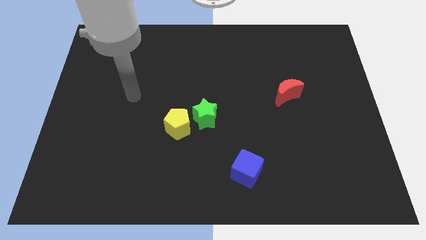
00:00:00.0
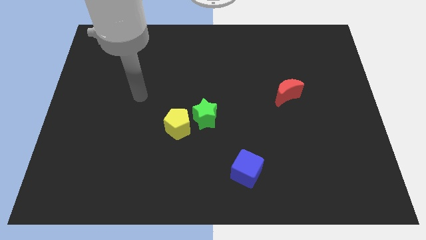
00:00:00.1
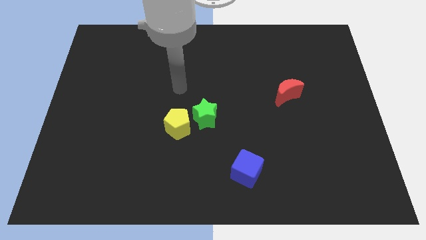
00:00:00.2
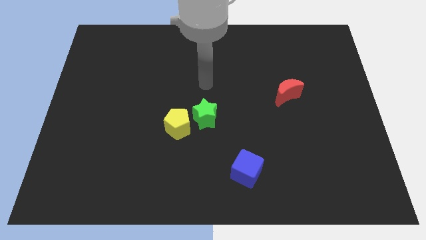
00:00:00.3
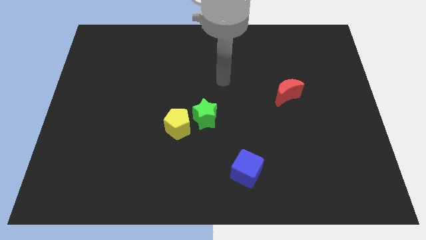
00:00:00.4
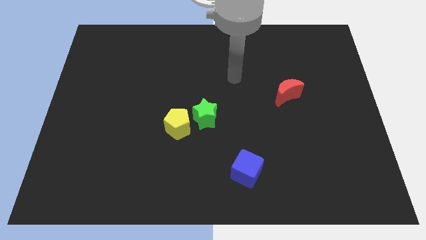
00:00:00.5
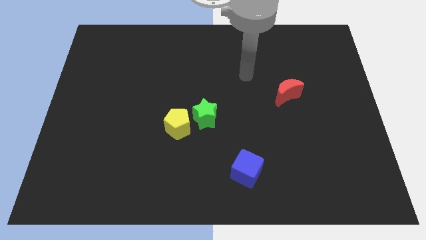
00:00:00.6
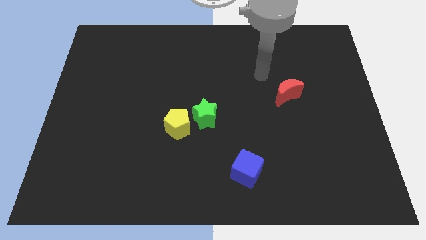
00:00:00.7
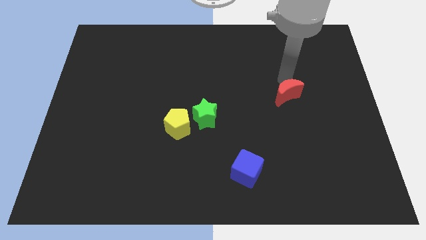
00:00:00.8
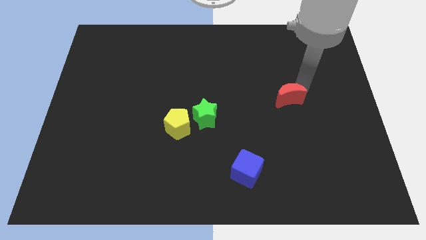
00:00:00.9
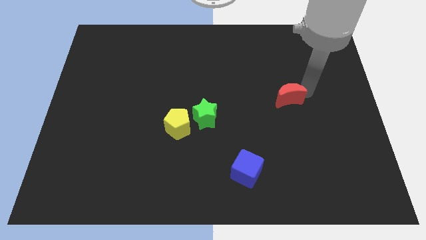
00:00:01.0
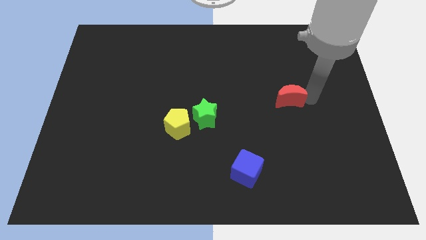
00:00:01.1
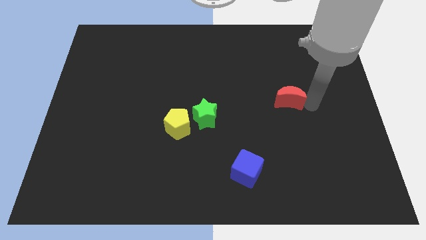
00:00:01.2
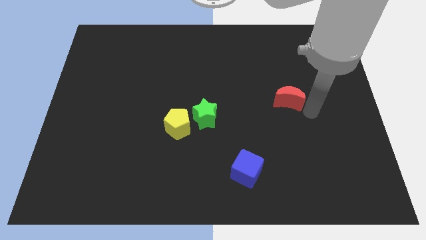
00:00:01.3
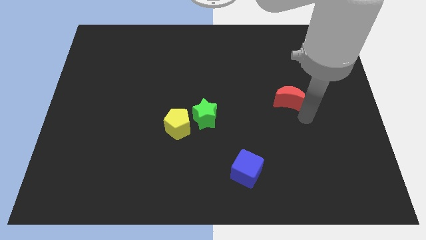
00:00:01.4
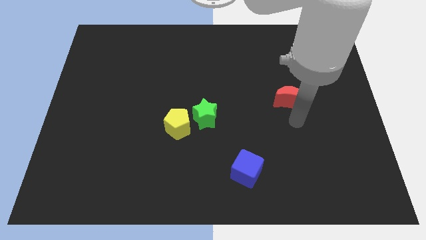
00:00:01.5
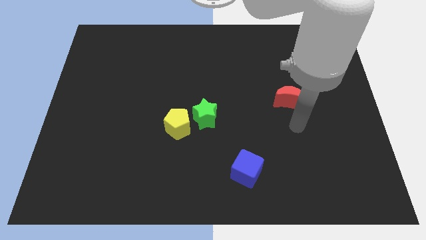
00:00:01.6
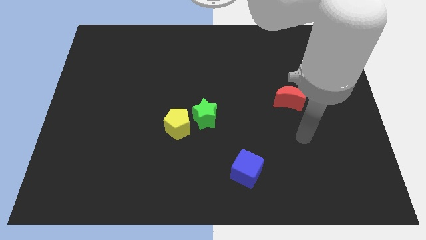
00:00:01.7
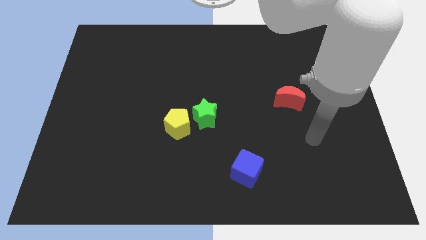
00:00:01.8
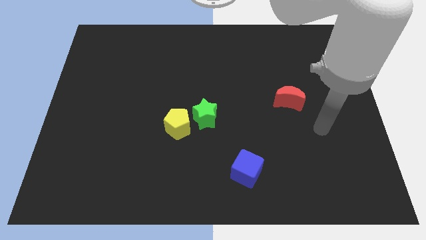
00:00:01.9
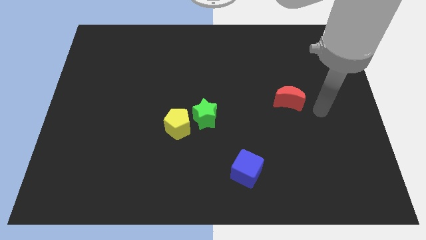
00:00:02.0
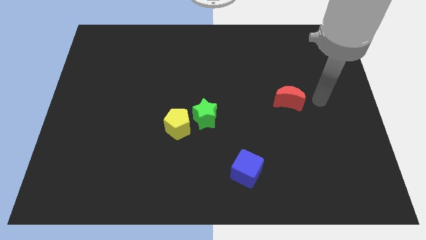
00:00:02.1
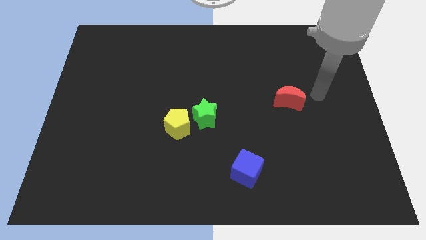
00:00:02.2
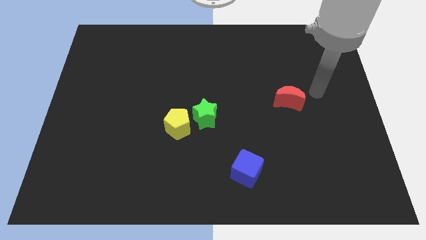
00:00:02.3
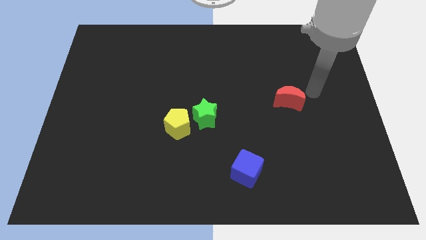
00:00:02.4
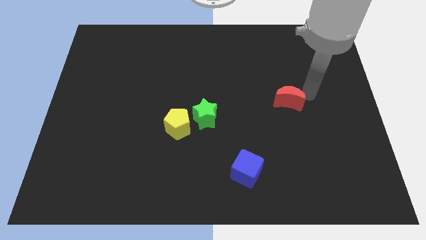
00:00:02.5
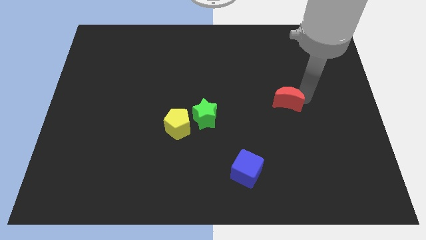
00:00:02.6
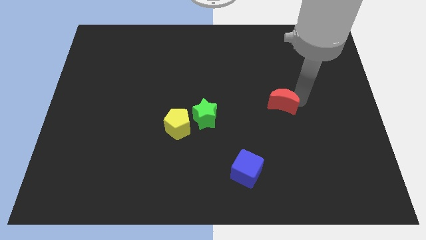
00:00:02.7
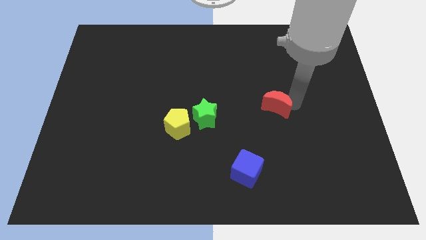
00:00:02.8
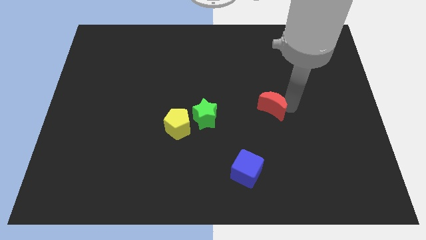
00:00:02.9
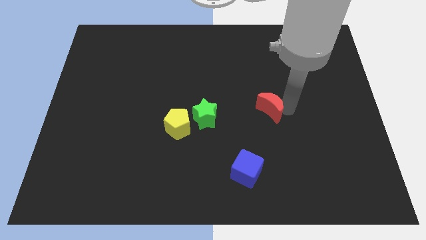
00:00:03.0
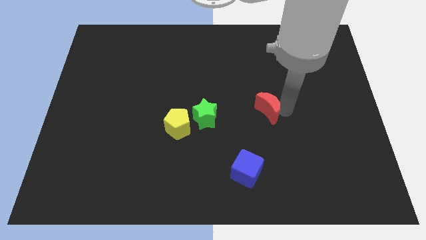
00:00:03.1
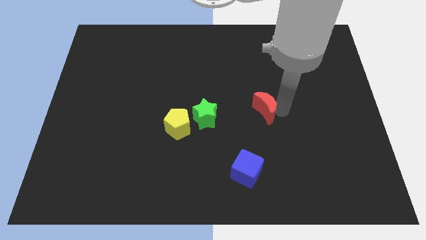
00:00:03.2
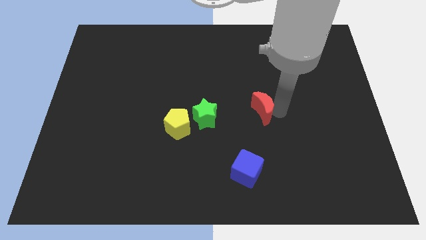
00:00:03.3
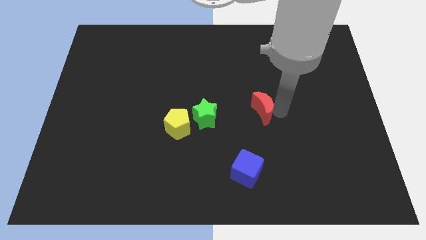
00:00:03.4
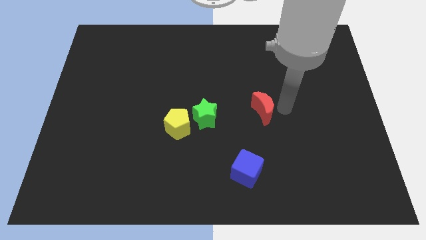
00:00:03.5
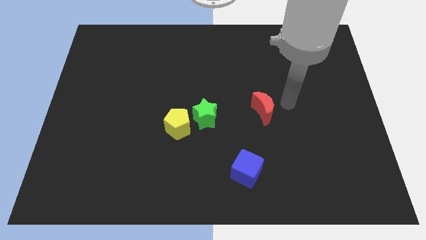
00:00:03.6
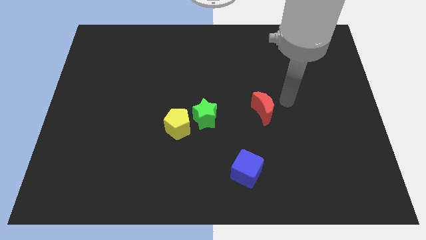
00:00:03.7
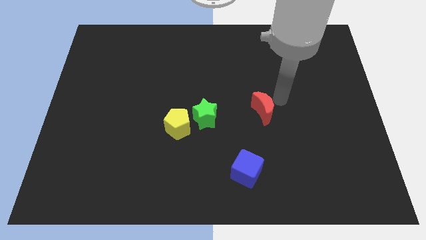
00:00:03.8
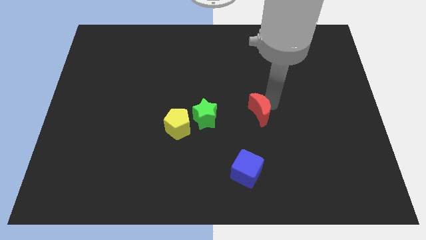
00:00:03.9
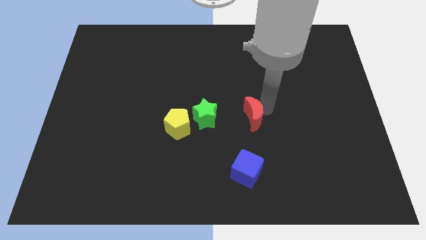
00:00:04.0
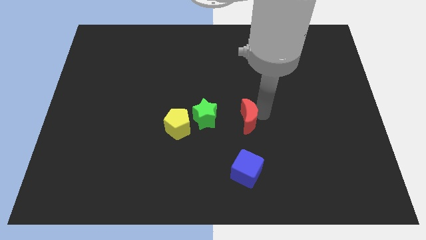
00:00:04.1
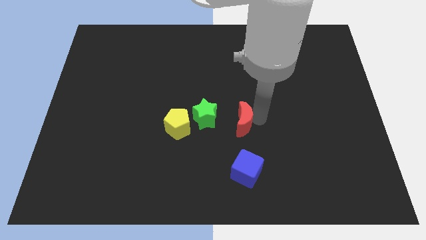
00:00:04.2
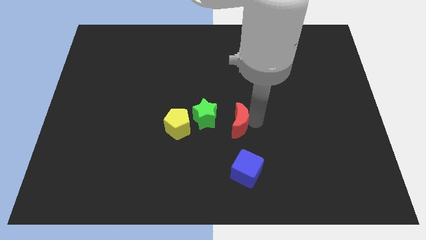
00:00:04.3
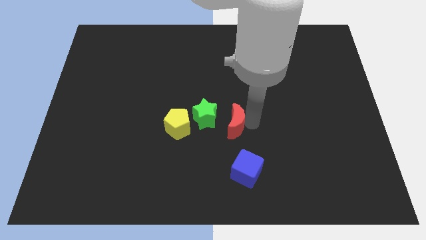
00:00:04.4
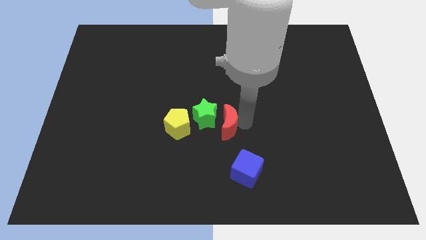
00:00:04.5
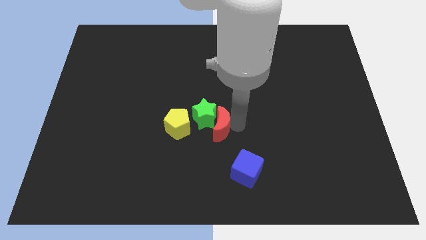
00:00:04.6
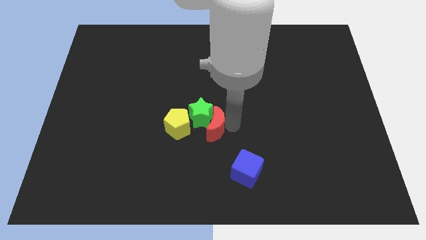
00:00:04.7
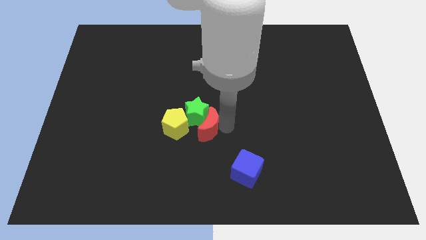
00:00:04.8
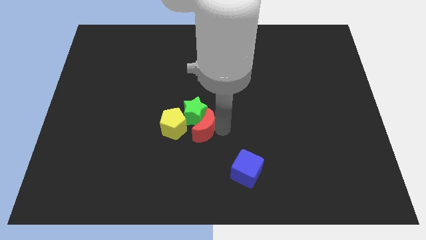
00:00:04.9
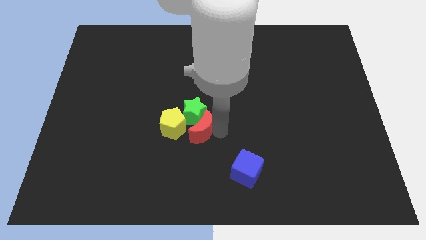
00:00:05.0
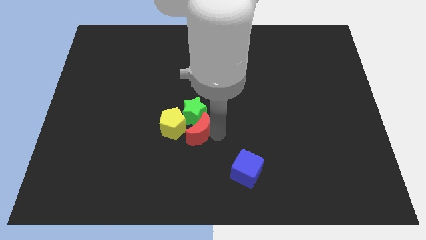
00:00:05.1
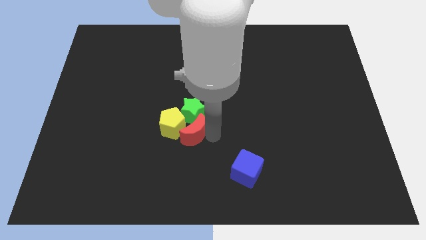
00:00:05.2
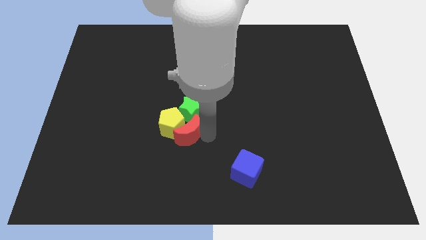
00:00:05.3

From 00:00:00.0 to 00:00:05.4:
slide the red block close to the yellow block

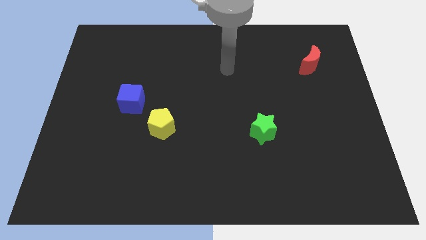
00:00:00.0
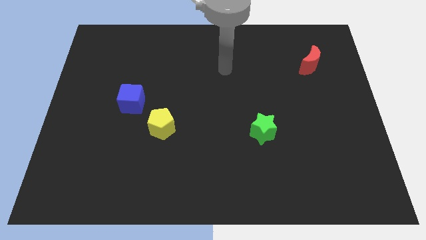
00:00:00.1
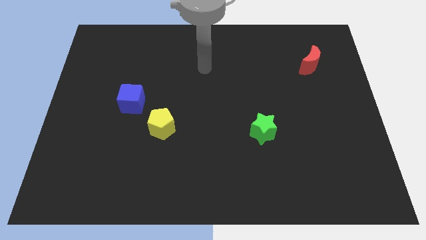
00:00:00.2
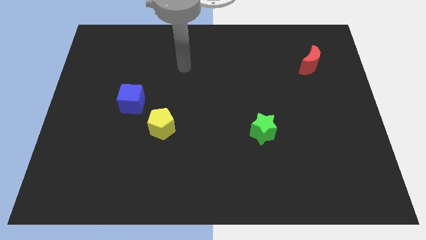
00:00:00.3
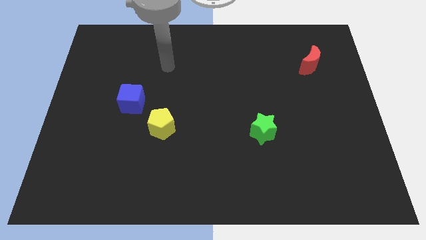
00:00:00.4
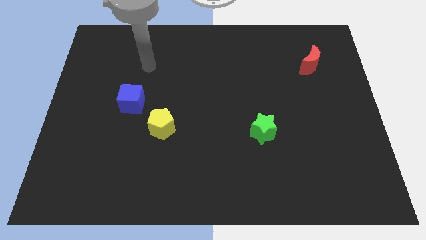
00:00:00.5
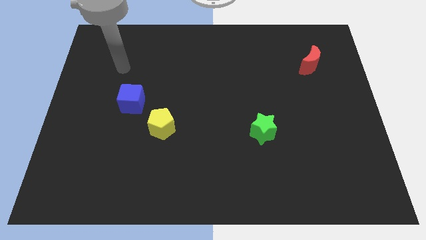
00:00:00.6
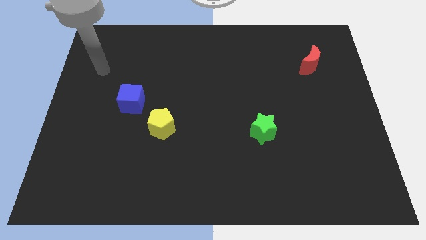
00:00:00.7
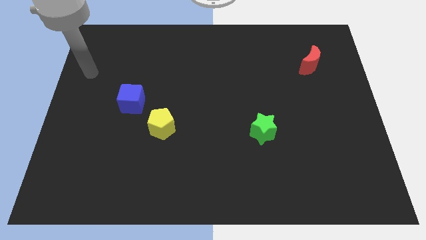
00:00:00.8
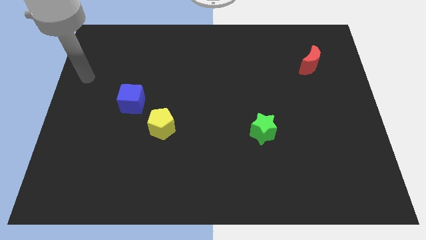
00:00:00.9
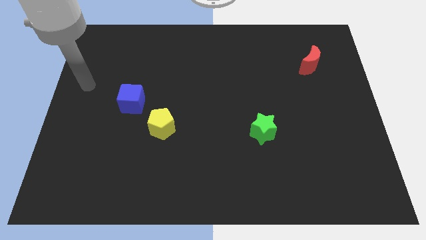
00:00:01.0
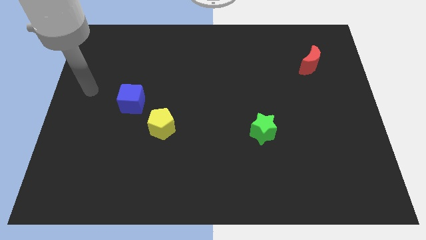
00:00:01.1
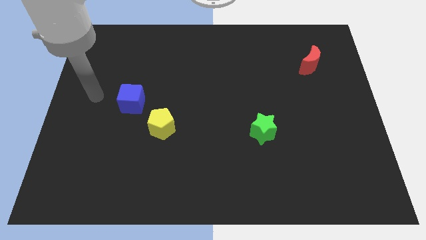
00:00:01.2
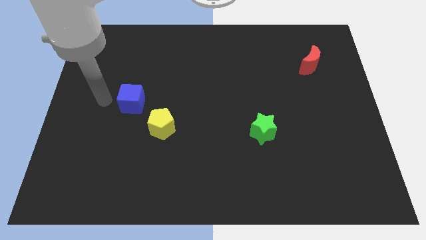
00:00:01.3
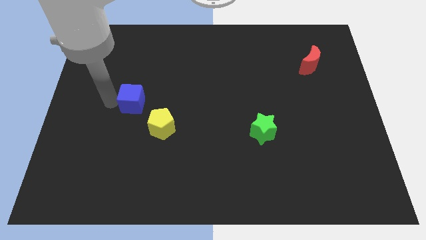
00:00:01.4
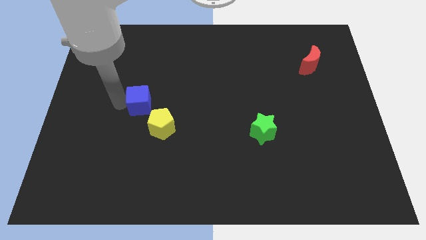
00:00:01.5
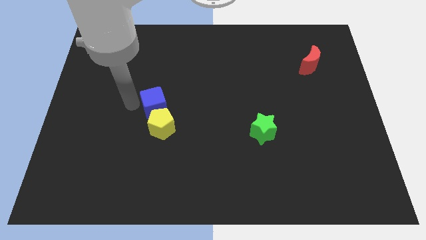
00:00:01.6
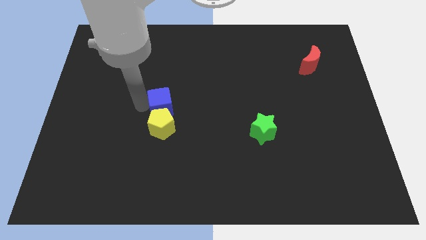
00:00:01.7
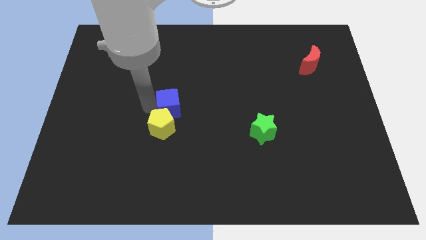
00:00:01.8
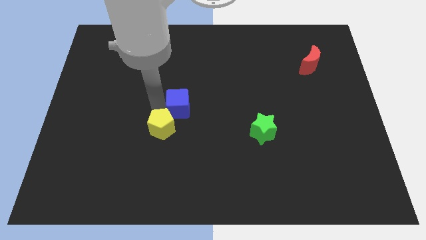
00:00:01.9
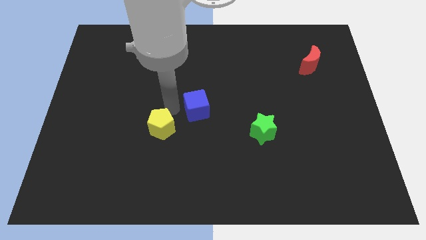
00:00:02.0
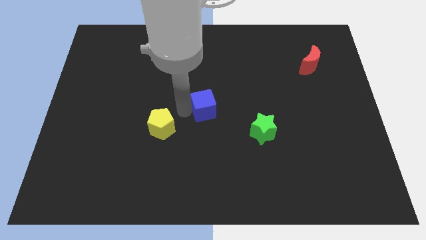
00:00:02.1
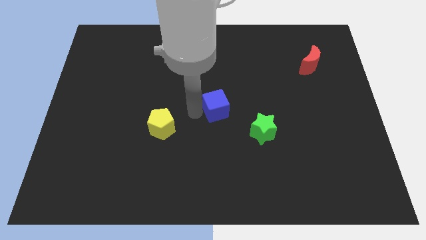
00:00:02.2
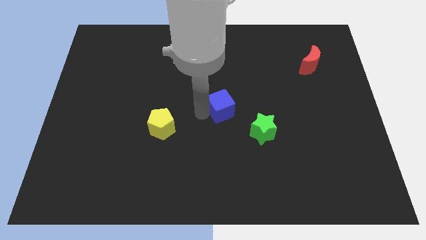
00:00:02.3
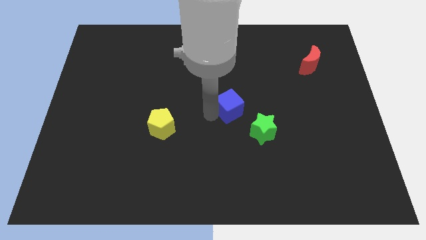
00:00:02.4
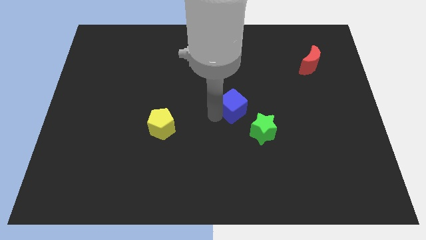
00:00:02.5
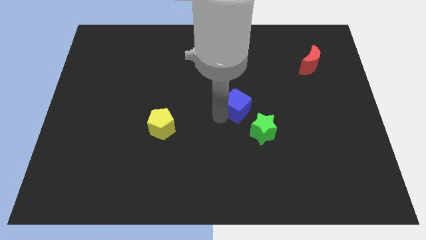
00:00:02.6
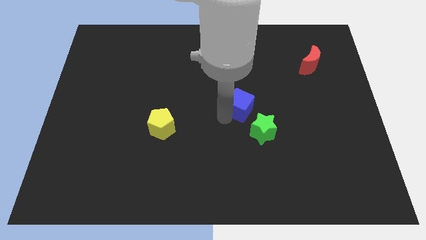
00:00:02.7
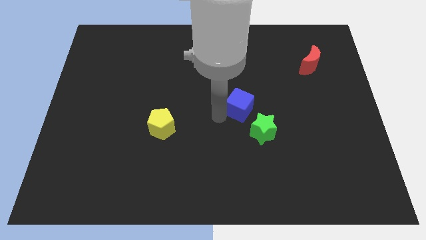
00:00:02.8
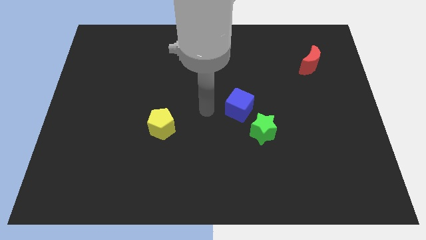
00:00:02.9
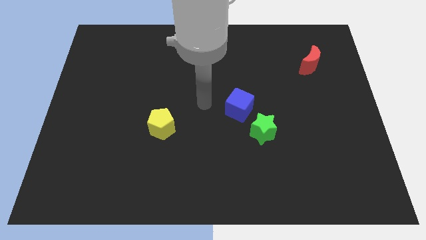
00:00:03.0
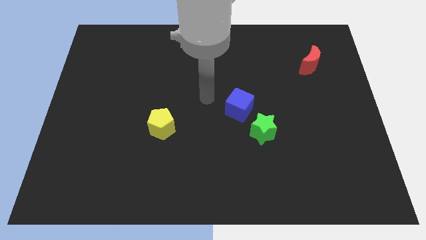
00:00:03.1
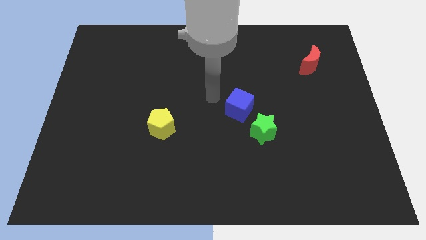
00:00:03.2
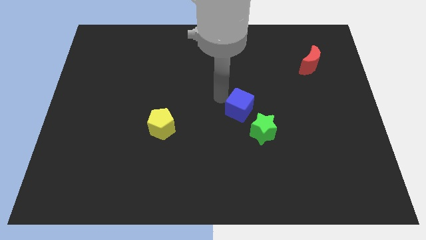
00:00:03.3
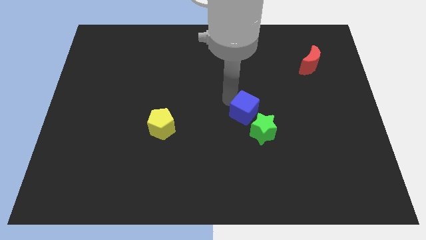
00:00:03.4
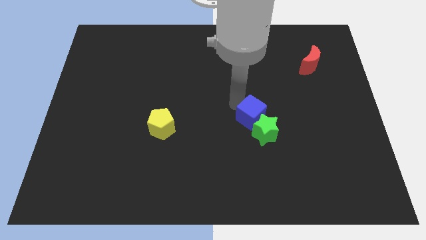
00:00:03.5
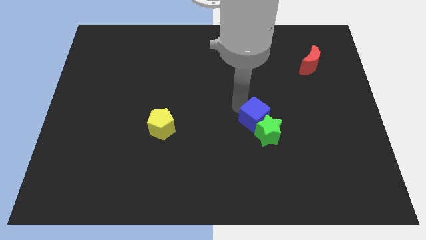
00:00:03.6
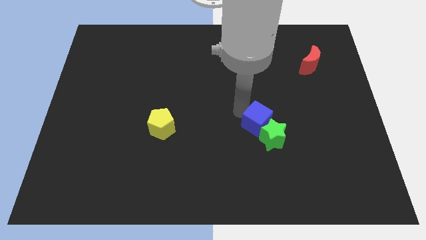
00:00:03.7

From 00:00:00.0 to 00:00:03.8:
put the blue cube towards the green block
